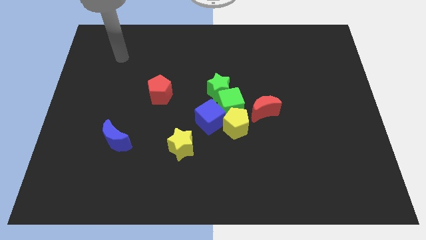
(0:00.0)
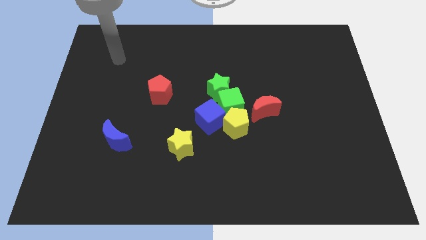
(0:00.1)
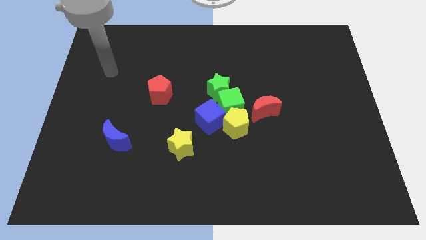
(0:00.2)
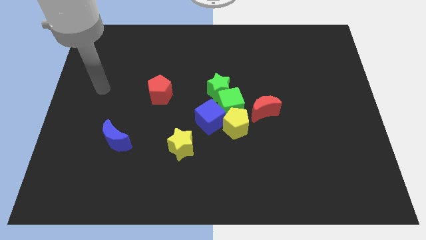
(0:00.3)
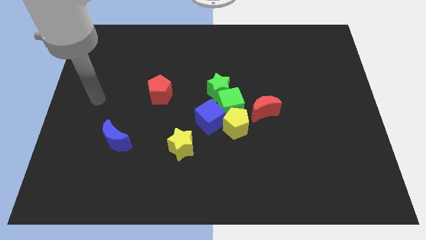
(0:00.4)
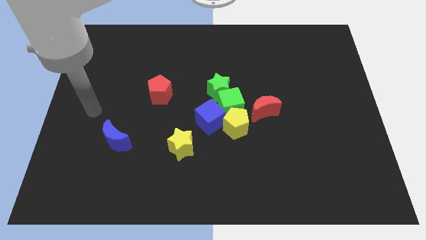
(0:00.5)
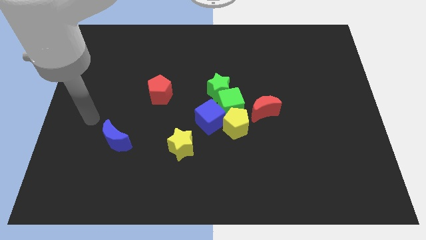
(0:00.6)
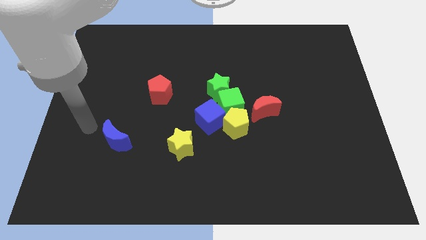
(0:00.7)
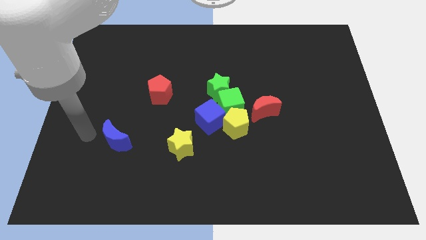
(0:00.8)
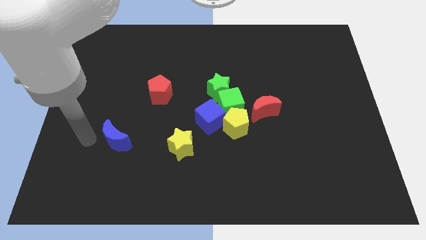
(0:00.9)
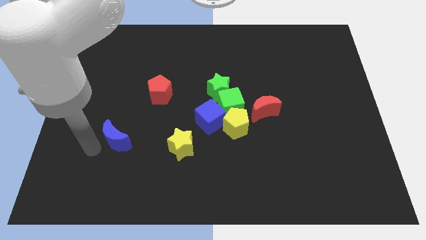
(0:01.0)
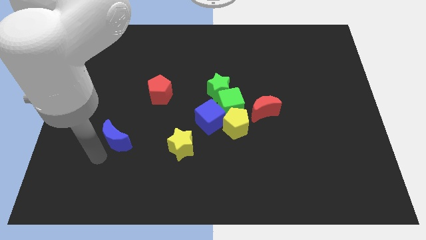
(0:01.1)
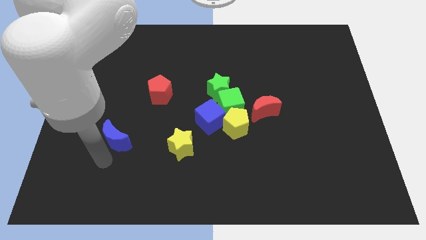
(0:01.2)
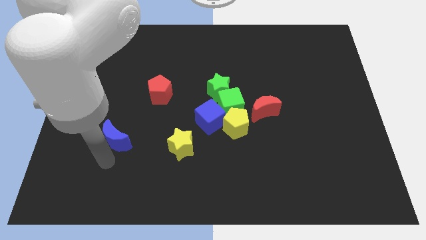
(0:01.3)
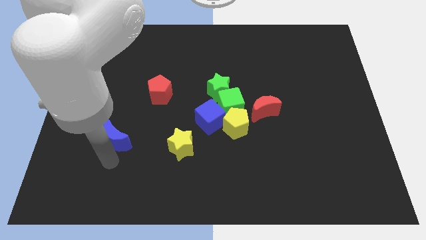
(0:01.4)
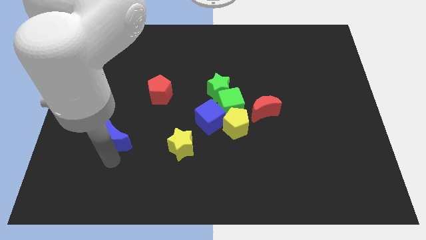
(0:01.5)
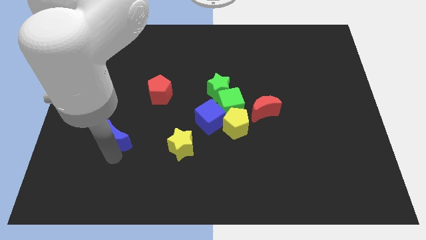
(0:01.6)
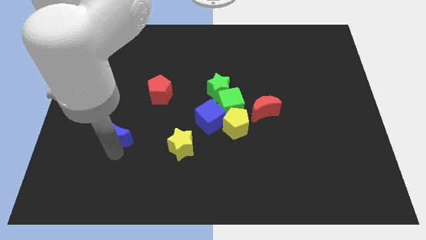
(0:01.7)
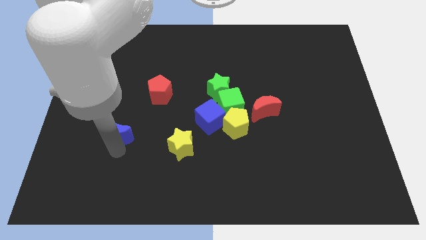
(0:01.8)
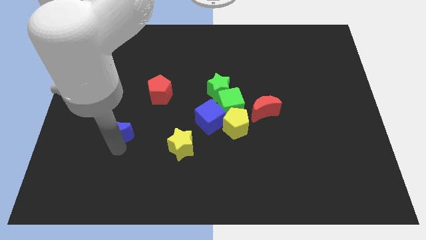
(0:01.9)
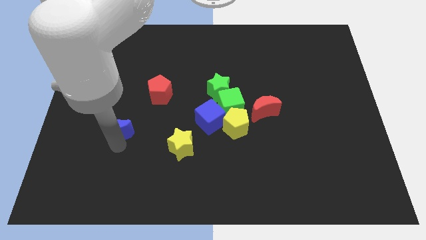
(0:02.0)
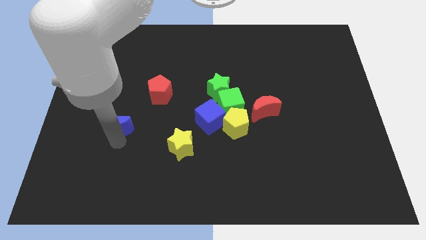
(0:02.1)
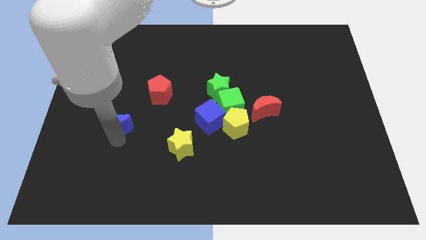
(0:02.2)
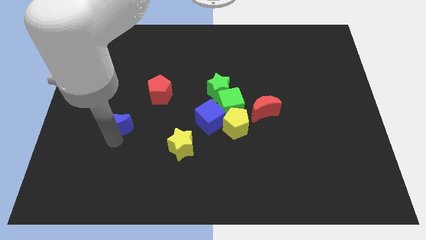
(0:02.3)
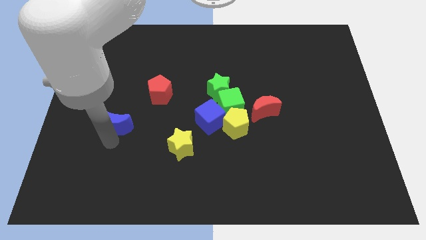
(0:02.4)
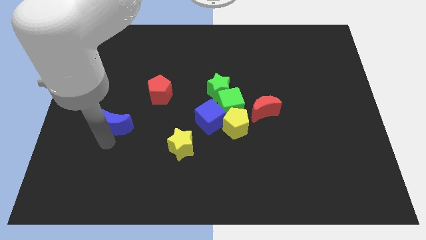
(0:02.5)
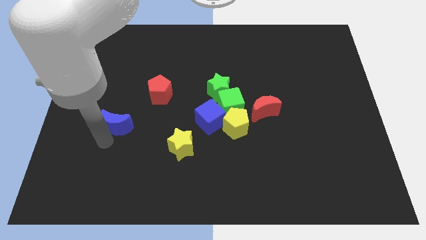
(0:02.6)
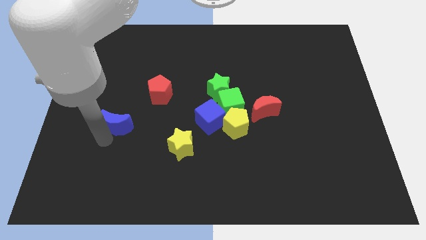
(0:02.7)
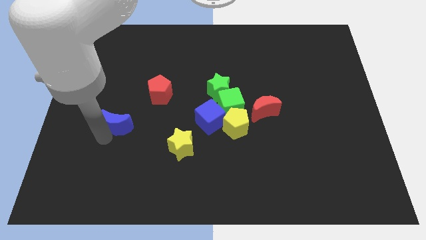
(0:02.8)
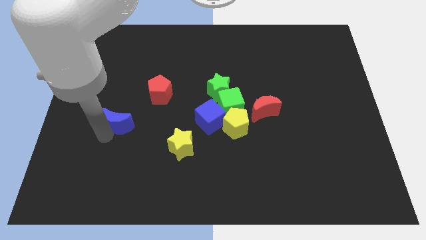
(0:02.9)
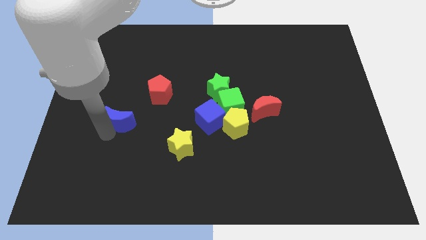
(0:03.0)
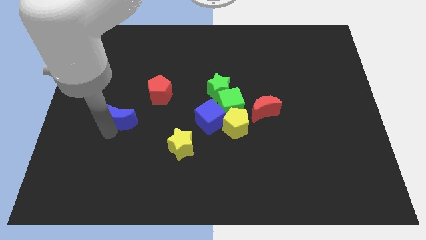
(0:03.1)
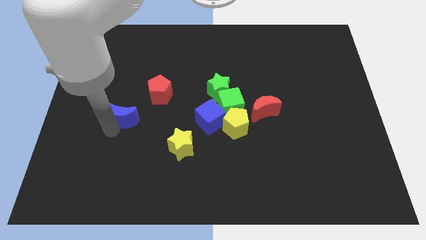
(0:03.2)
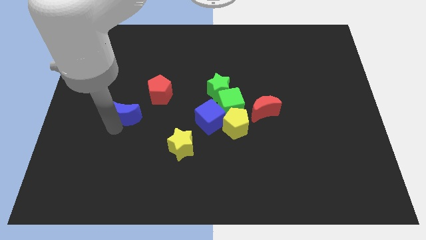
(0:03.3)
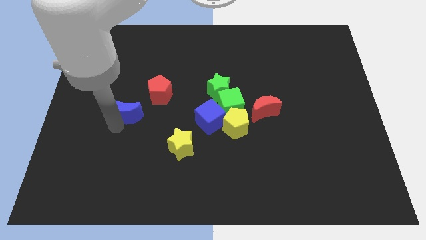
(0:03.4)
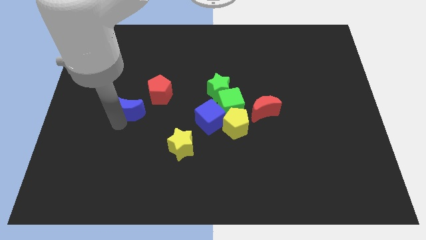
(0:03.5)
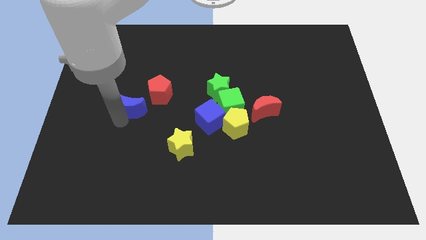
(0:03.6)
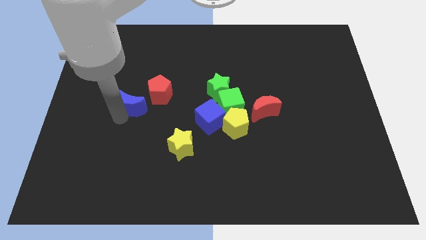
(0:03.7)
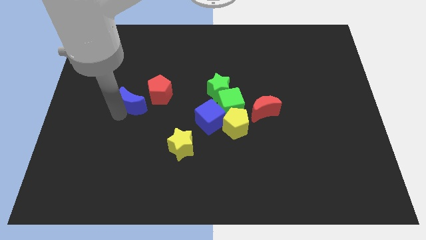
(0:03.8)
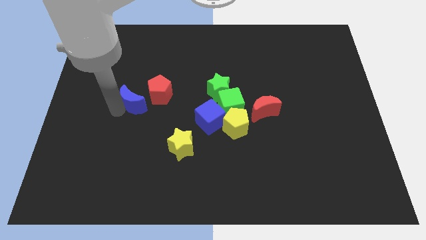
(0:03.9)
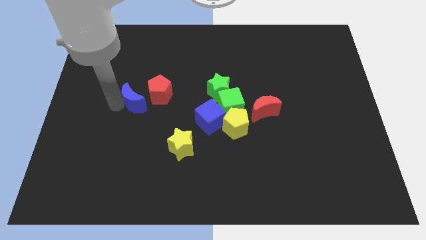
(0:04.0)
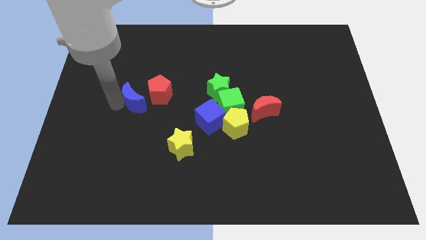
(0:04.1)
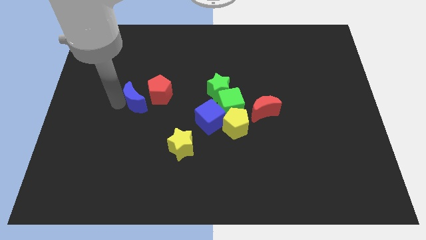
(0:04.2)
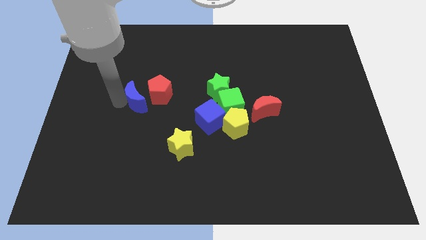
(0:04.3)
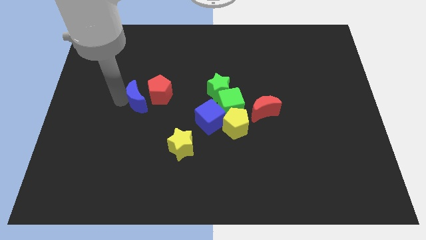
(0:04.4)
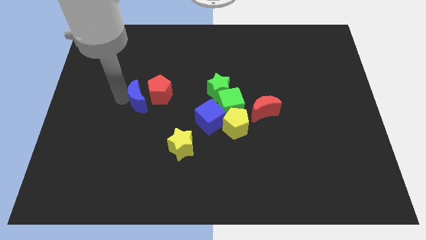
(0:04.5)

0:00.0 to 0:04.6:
slide the blue moon close to the red pentagon

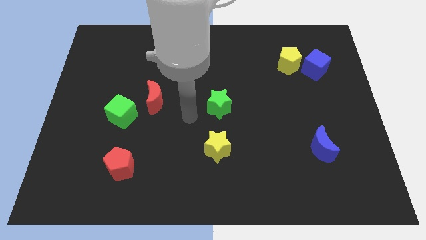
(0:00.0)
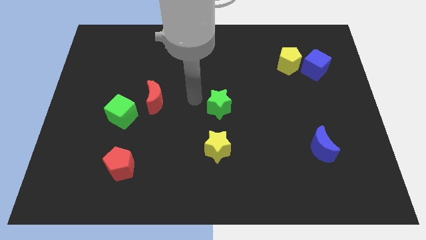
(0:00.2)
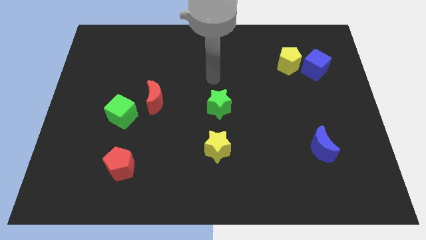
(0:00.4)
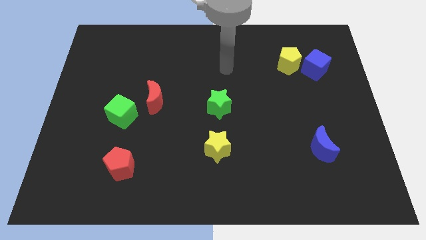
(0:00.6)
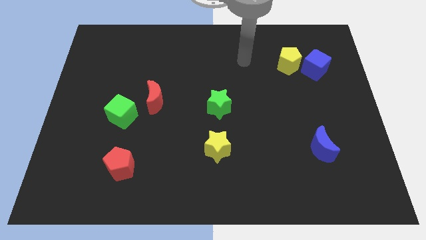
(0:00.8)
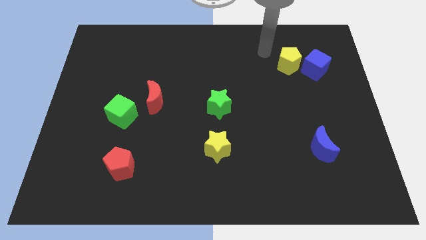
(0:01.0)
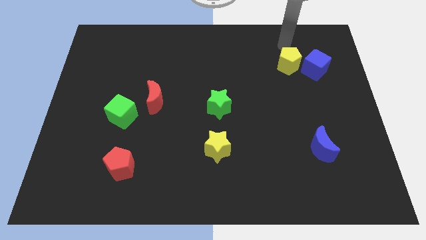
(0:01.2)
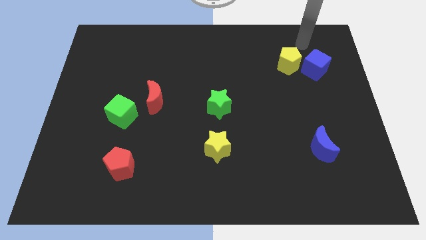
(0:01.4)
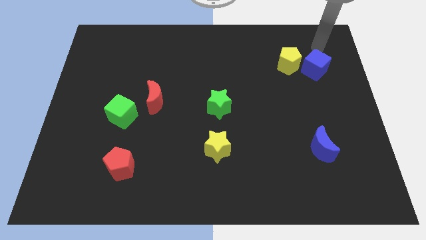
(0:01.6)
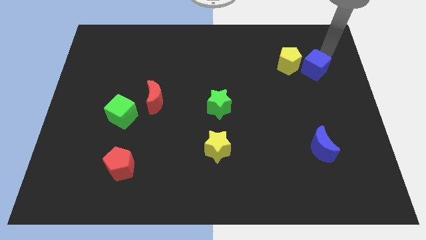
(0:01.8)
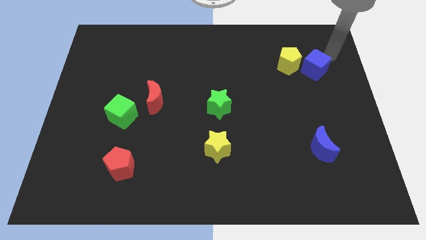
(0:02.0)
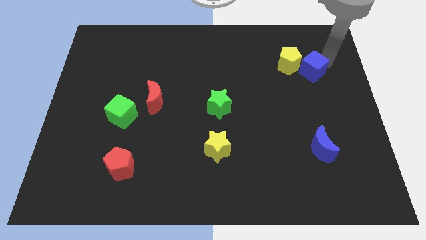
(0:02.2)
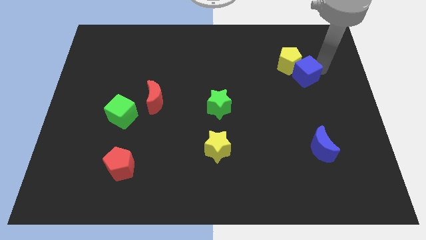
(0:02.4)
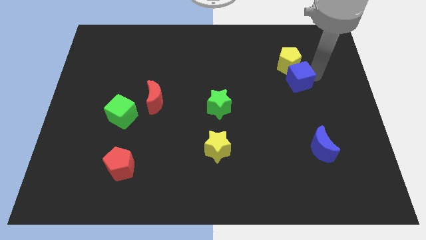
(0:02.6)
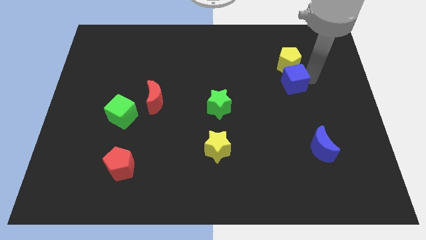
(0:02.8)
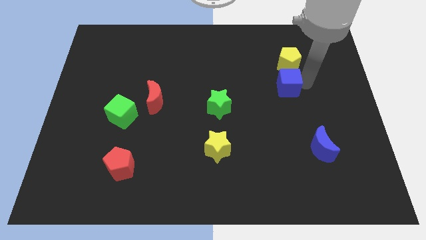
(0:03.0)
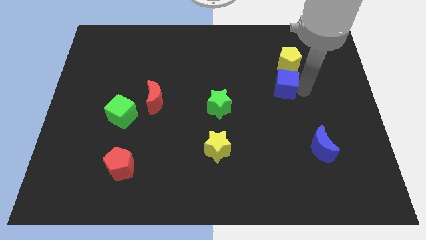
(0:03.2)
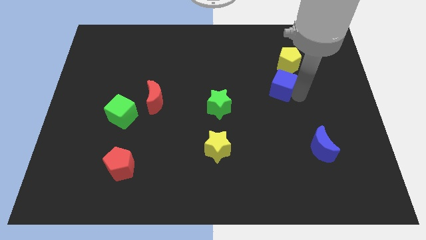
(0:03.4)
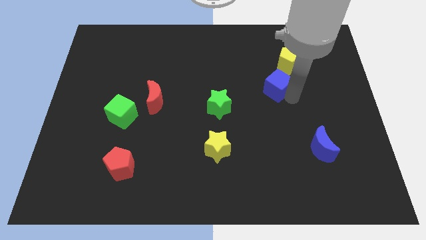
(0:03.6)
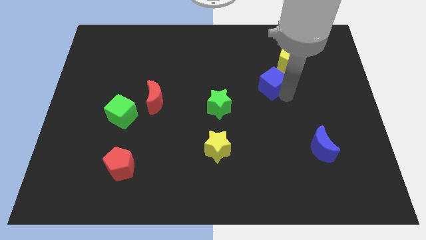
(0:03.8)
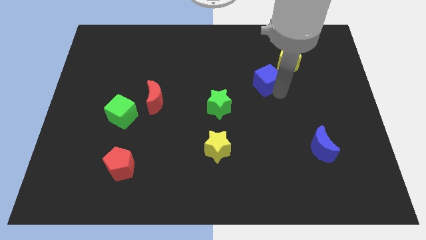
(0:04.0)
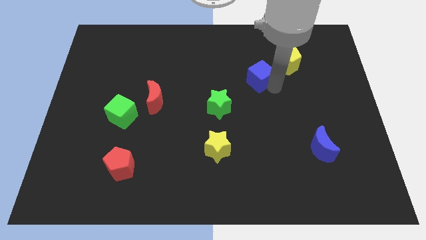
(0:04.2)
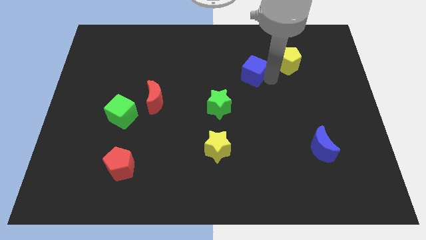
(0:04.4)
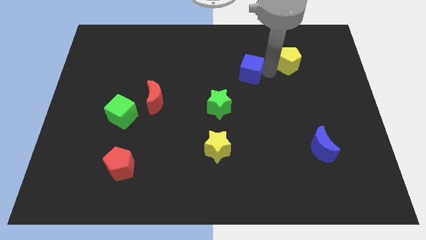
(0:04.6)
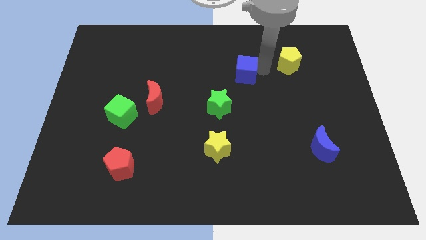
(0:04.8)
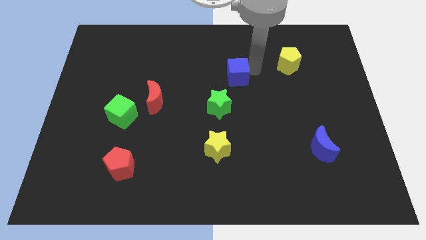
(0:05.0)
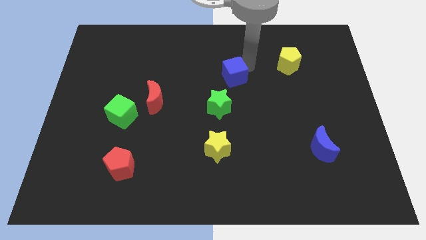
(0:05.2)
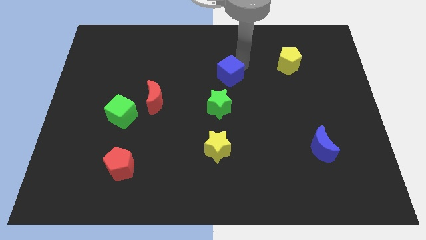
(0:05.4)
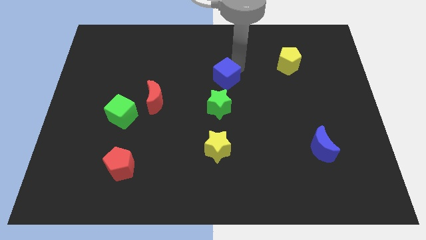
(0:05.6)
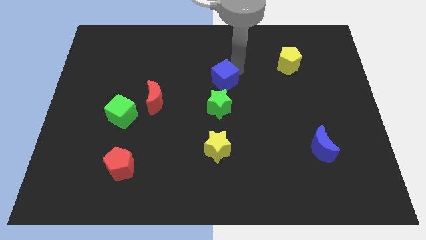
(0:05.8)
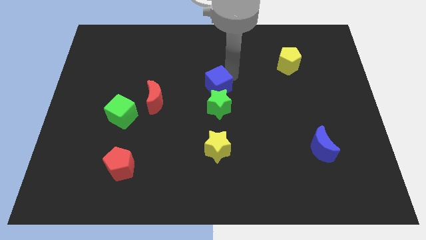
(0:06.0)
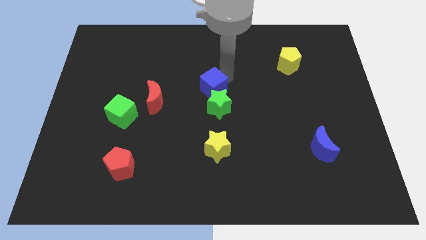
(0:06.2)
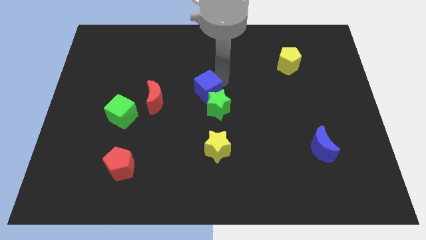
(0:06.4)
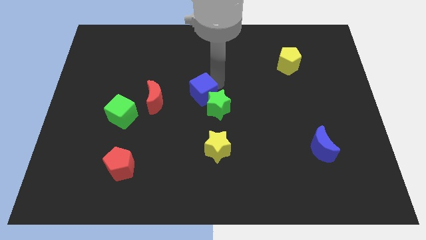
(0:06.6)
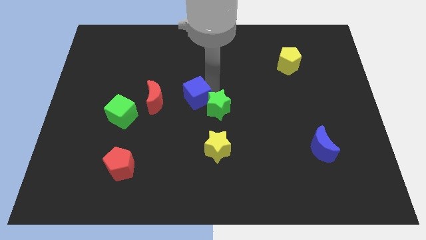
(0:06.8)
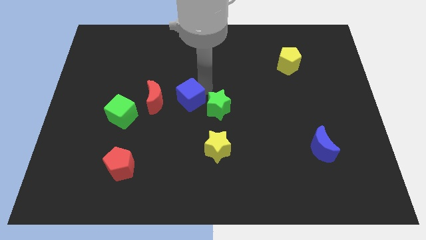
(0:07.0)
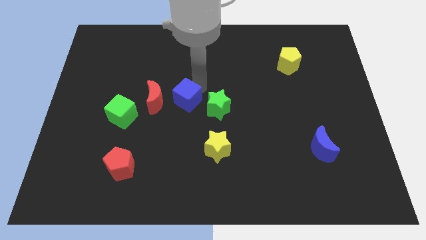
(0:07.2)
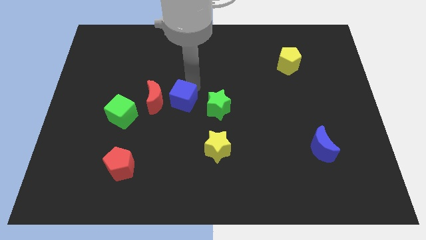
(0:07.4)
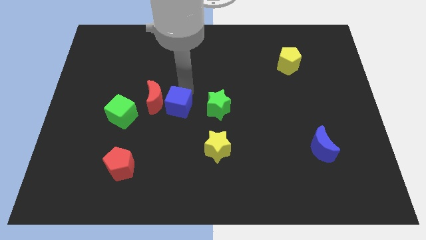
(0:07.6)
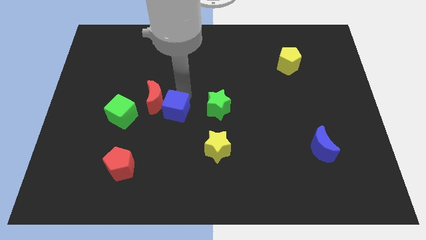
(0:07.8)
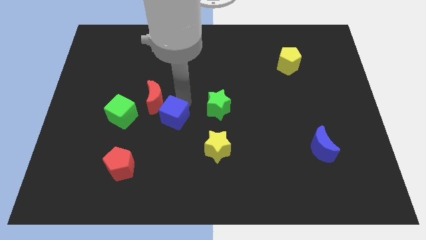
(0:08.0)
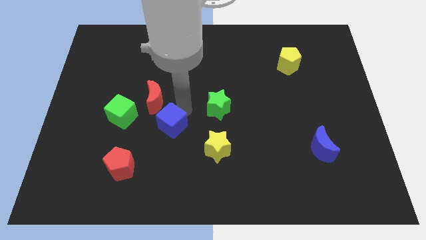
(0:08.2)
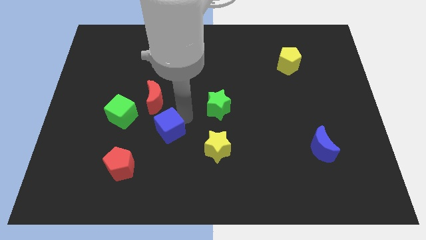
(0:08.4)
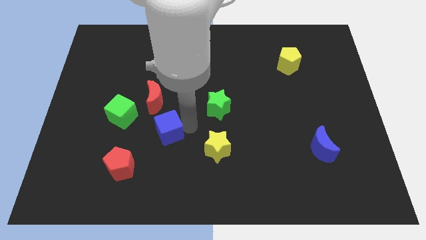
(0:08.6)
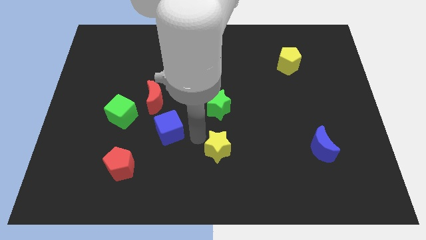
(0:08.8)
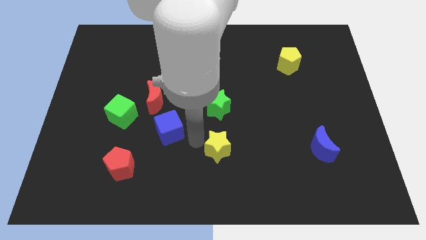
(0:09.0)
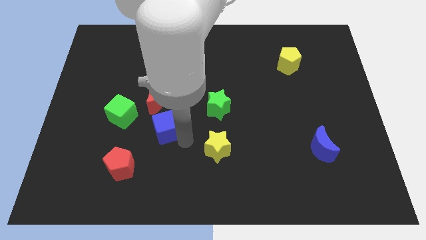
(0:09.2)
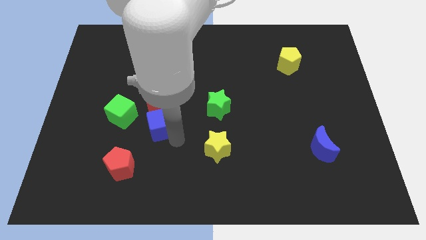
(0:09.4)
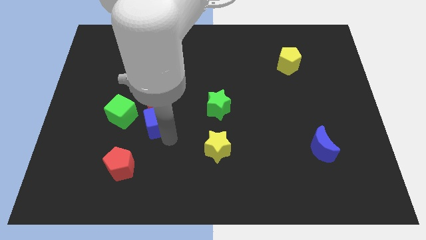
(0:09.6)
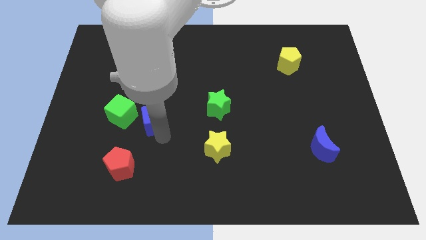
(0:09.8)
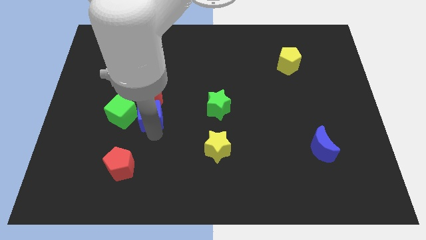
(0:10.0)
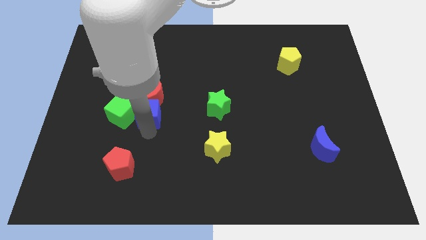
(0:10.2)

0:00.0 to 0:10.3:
push the blue cube towards the green cube
